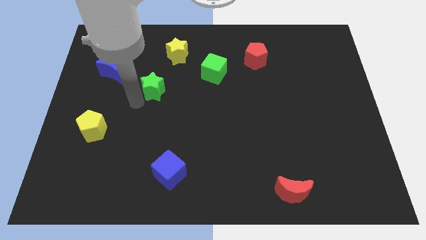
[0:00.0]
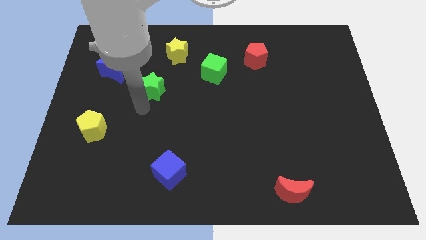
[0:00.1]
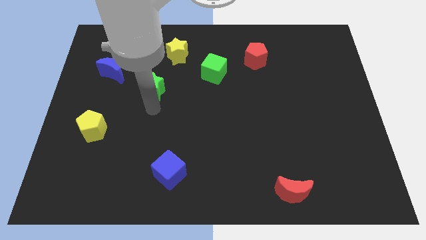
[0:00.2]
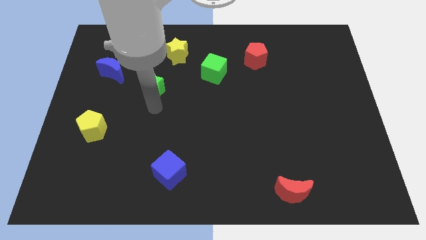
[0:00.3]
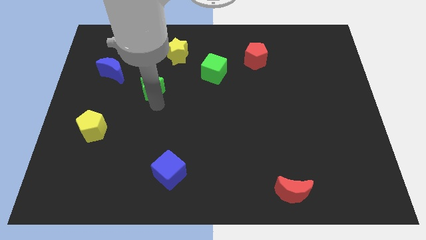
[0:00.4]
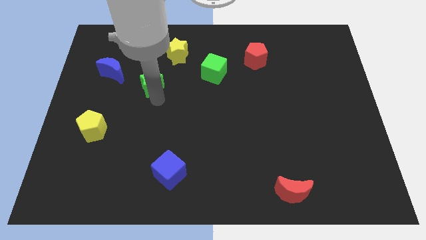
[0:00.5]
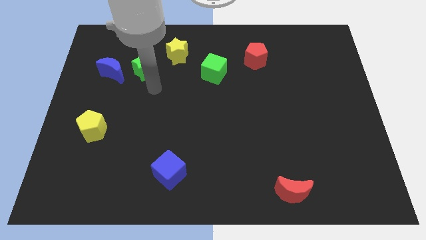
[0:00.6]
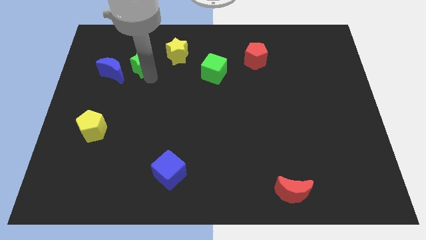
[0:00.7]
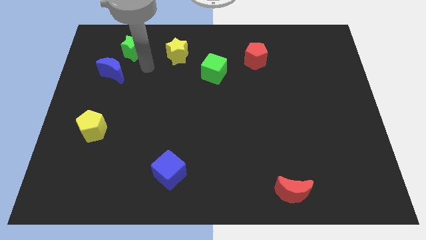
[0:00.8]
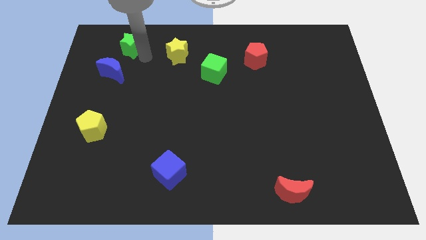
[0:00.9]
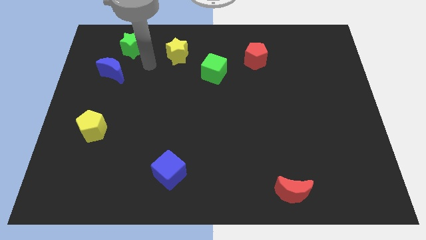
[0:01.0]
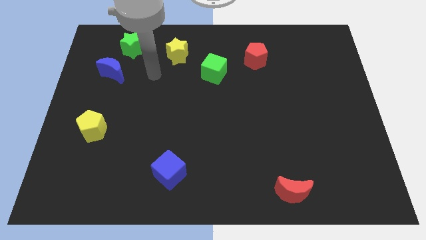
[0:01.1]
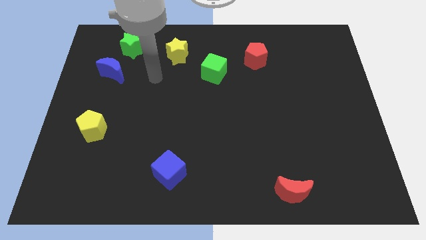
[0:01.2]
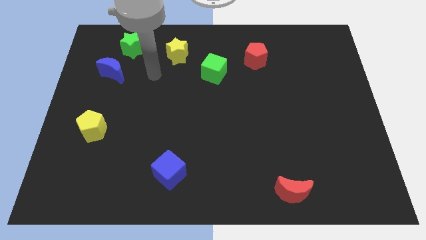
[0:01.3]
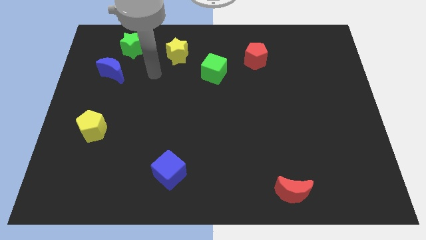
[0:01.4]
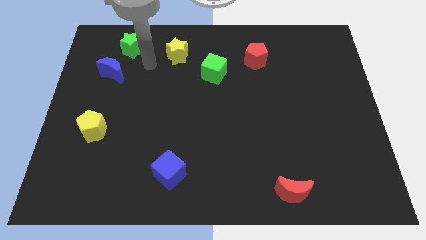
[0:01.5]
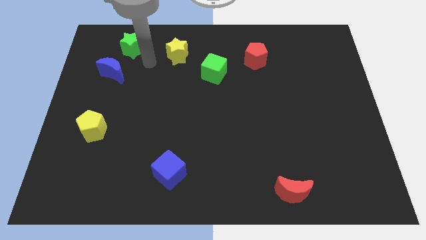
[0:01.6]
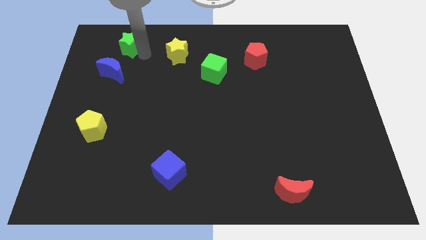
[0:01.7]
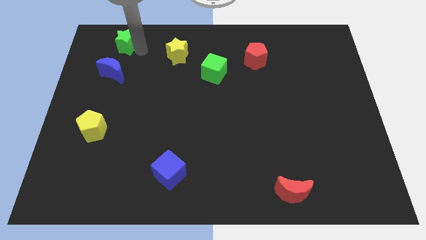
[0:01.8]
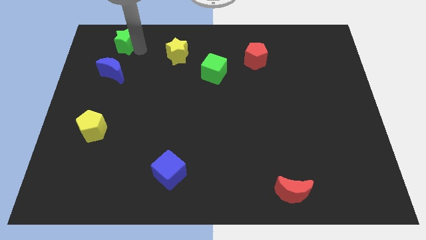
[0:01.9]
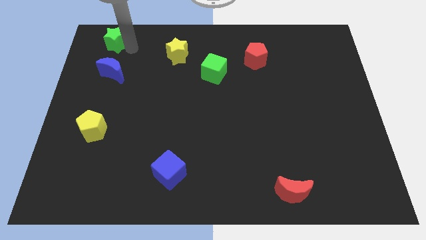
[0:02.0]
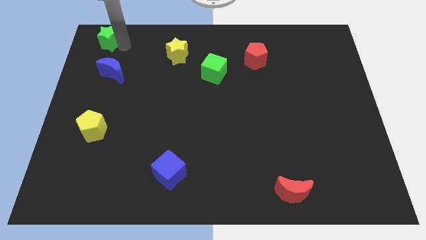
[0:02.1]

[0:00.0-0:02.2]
place green star on top of blue crescent

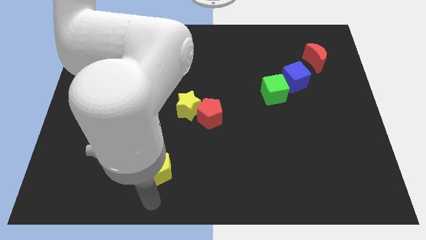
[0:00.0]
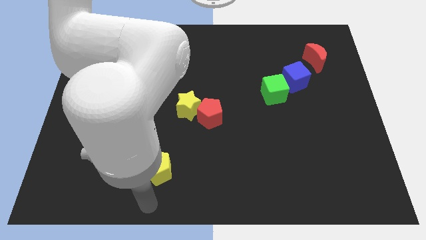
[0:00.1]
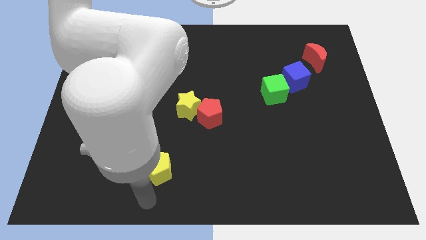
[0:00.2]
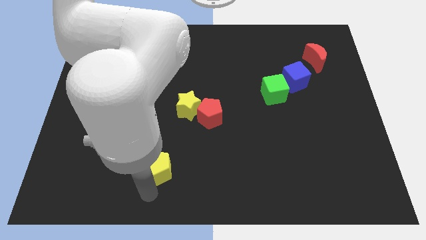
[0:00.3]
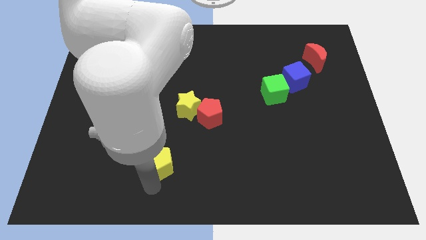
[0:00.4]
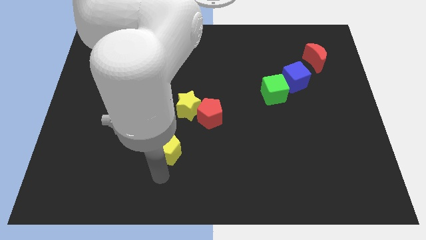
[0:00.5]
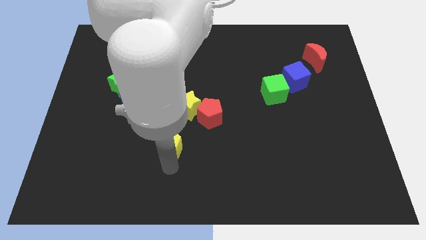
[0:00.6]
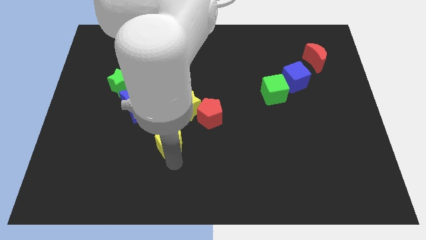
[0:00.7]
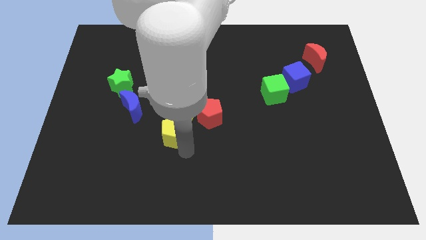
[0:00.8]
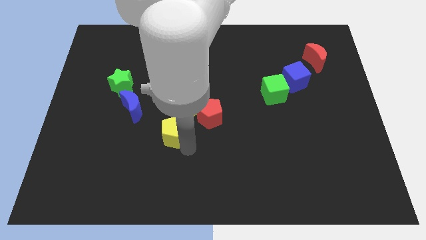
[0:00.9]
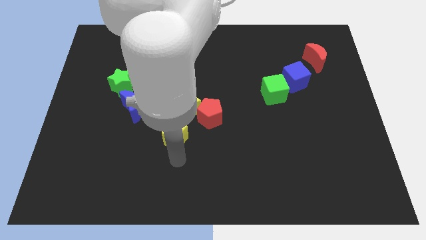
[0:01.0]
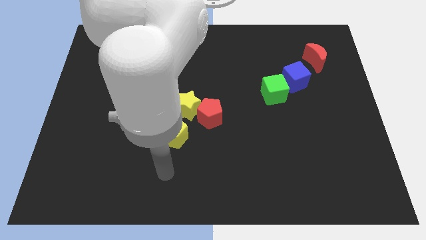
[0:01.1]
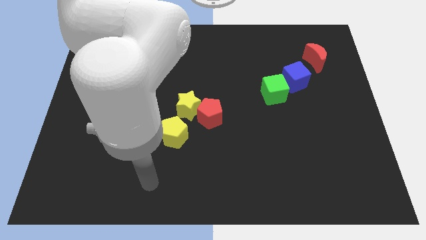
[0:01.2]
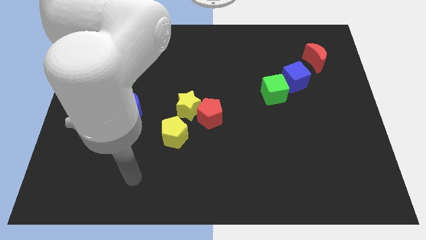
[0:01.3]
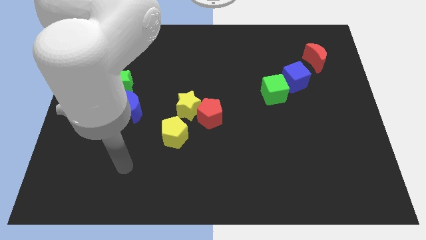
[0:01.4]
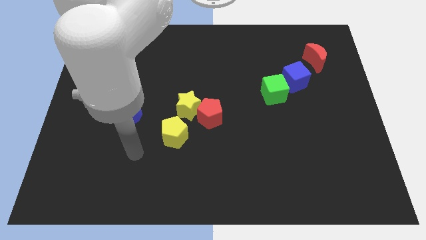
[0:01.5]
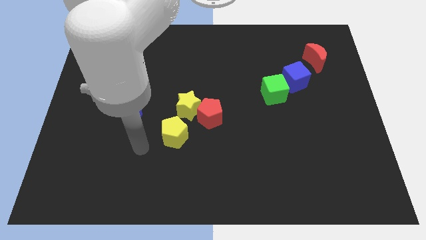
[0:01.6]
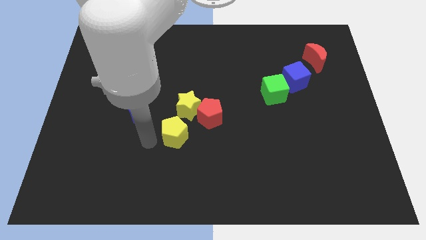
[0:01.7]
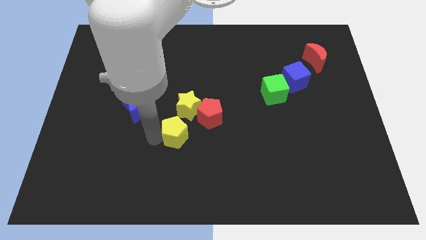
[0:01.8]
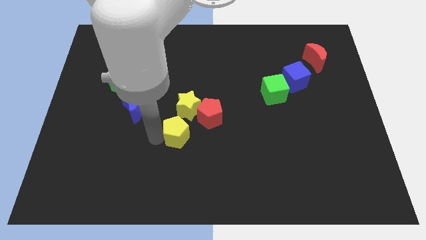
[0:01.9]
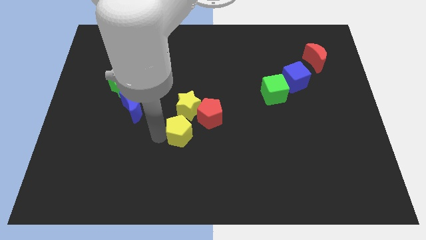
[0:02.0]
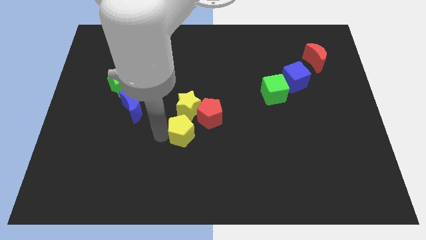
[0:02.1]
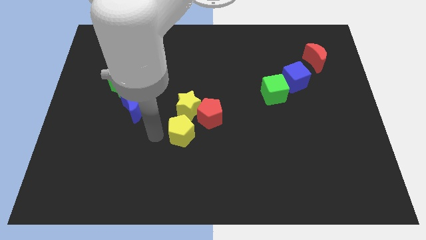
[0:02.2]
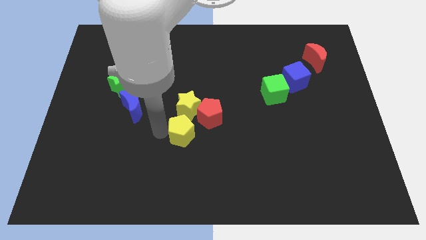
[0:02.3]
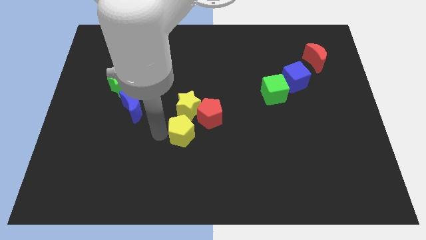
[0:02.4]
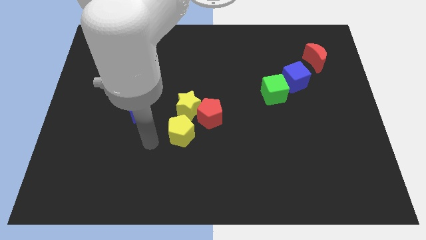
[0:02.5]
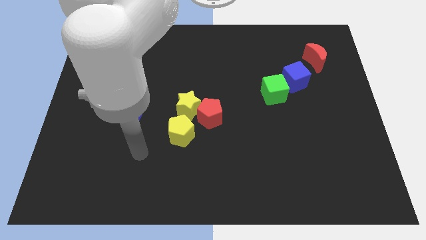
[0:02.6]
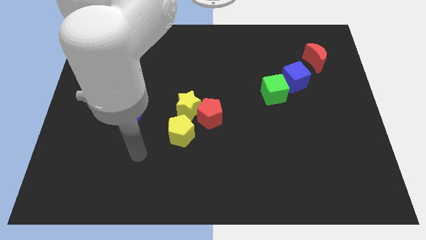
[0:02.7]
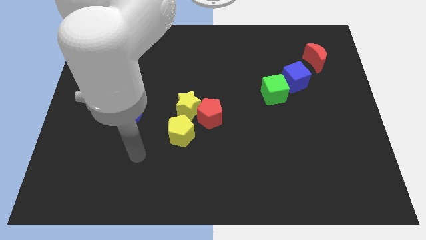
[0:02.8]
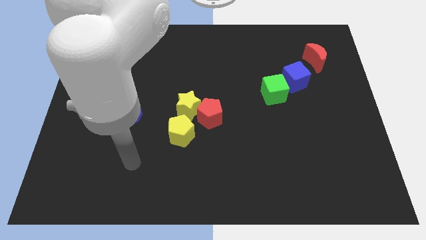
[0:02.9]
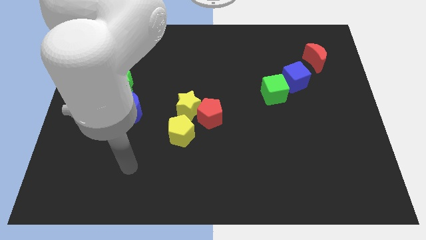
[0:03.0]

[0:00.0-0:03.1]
slide the yellow pentagon to the bottom left side of the yellow star

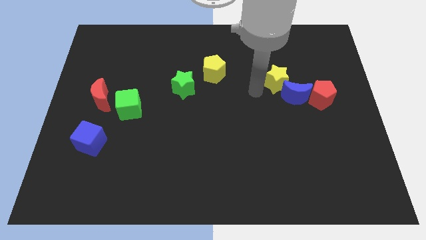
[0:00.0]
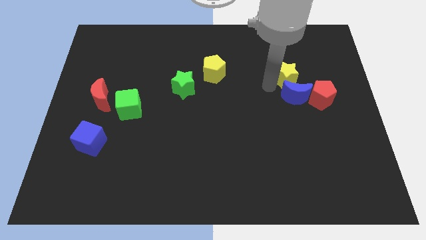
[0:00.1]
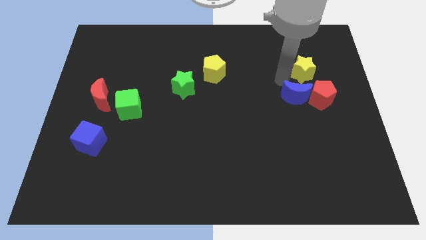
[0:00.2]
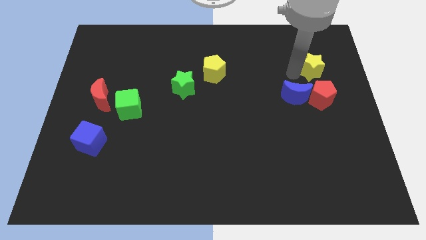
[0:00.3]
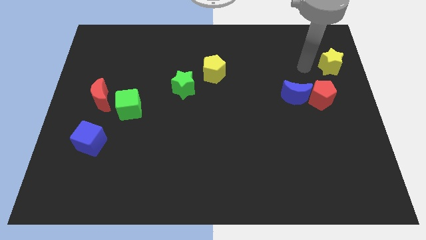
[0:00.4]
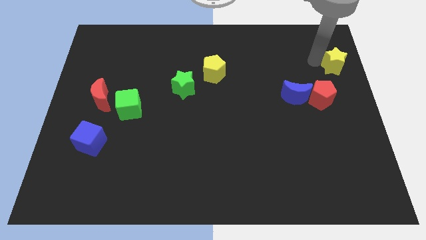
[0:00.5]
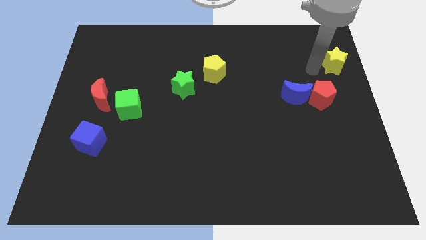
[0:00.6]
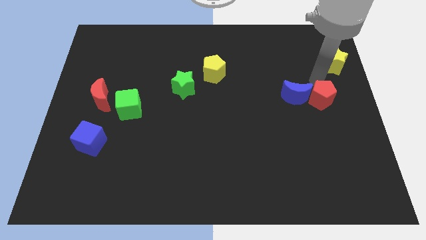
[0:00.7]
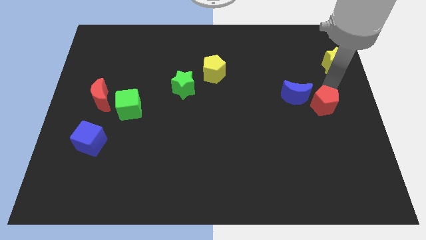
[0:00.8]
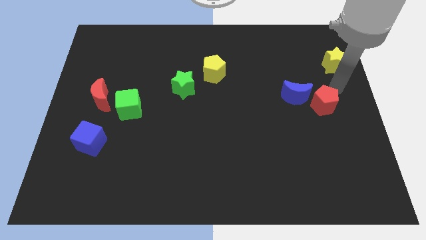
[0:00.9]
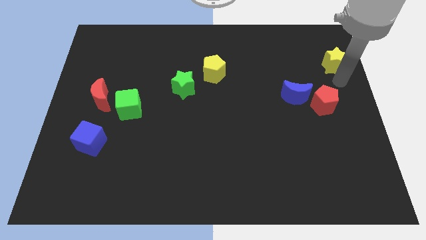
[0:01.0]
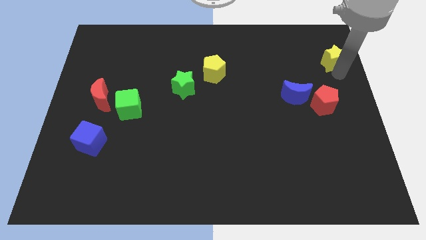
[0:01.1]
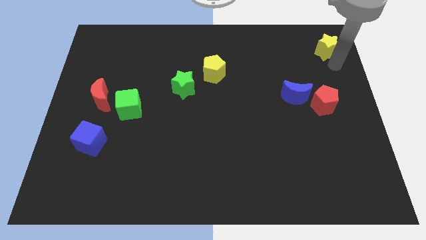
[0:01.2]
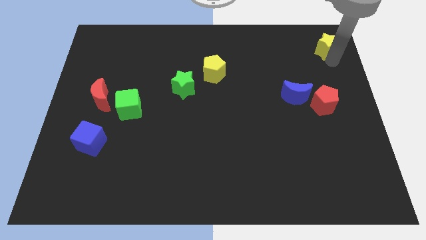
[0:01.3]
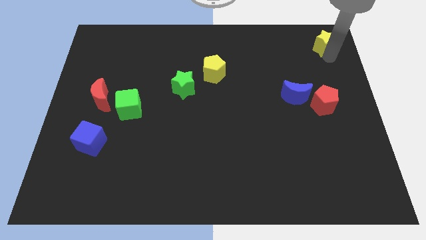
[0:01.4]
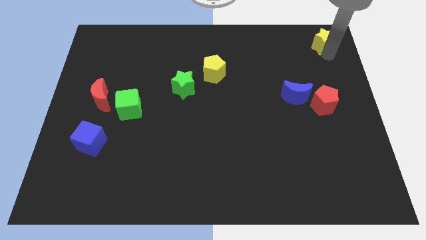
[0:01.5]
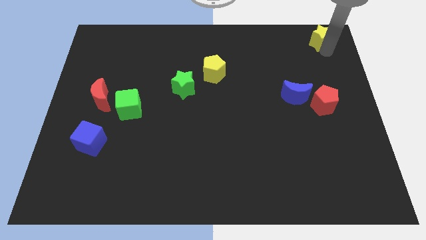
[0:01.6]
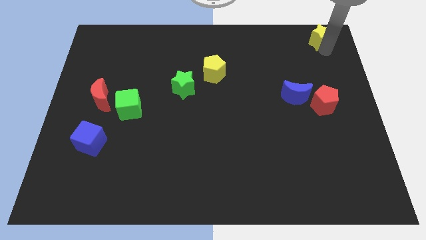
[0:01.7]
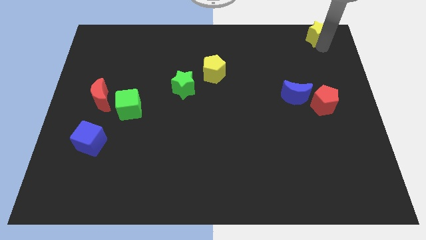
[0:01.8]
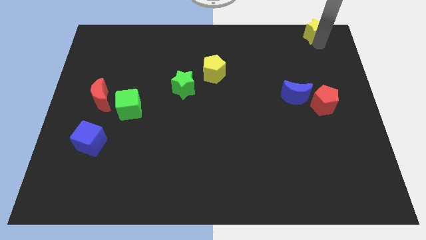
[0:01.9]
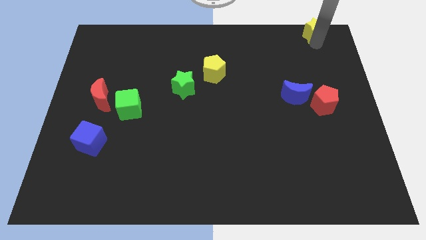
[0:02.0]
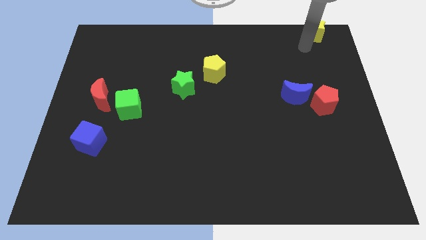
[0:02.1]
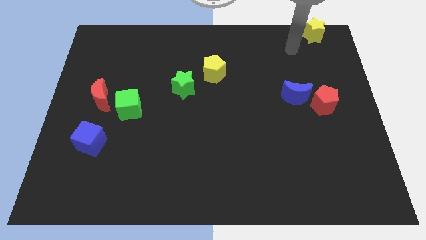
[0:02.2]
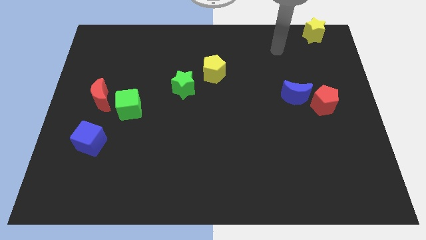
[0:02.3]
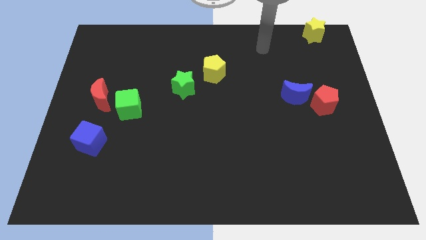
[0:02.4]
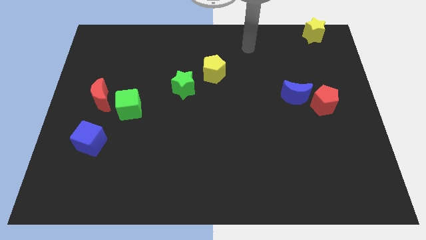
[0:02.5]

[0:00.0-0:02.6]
put the yellow star at the top side of the red pentagon

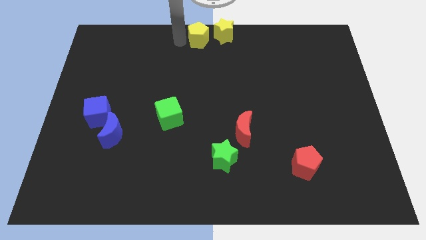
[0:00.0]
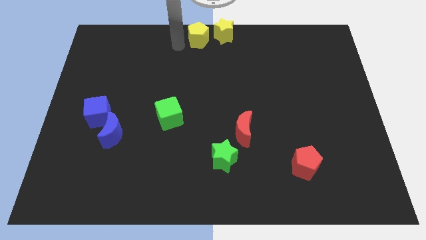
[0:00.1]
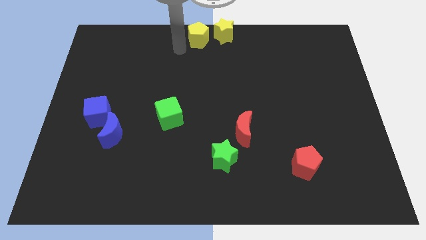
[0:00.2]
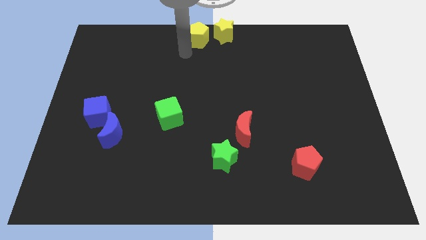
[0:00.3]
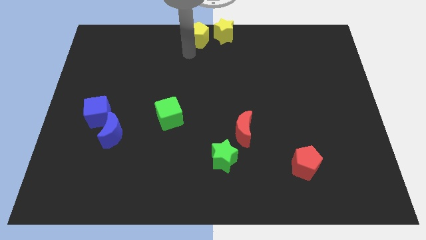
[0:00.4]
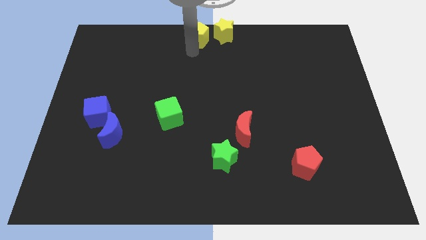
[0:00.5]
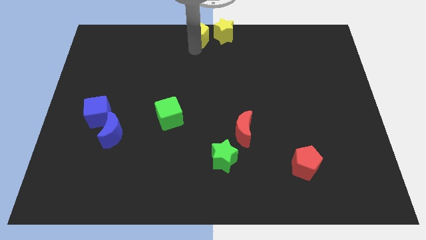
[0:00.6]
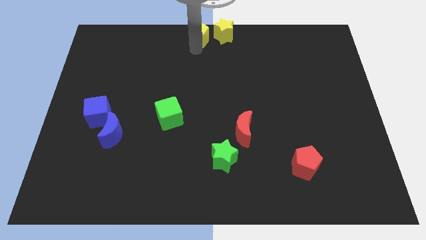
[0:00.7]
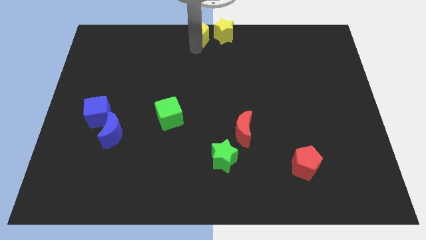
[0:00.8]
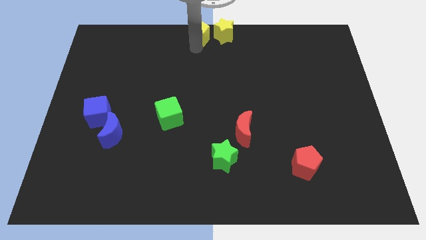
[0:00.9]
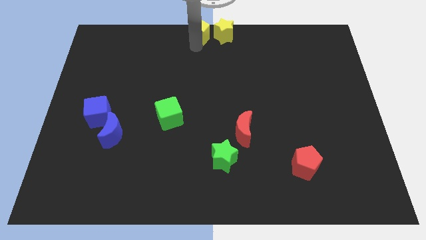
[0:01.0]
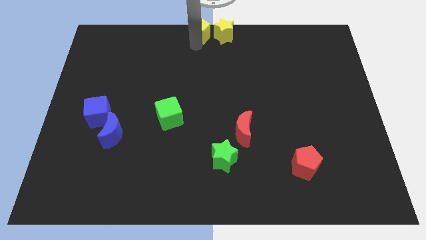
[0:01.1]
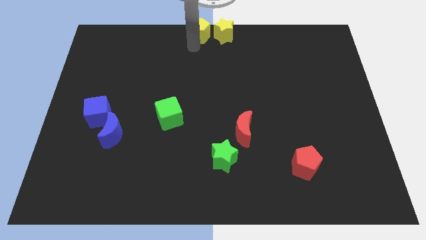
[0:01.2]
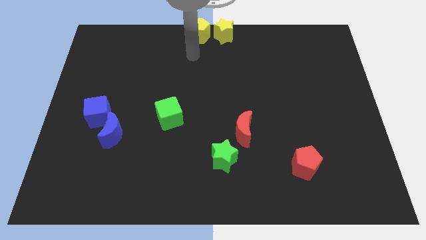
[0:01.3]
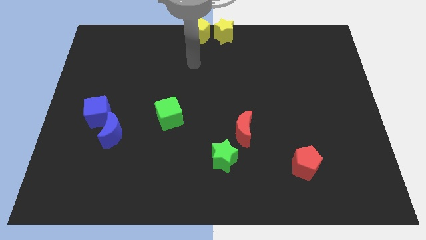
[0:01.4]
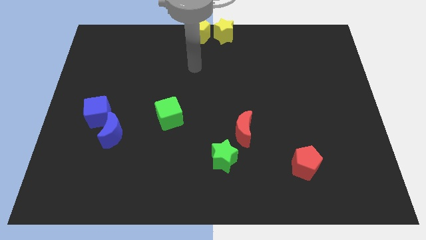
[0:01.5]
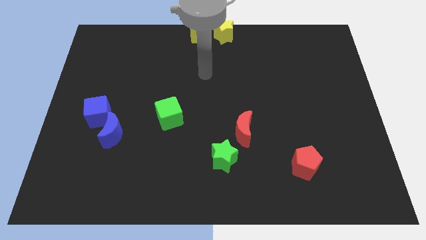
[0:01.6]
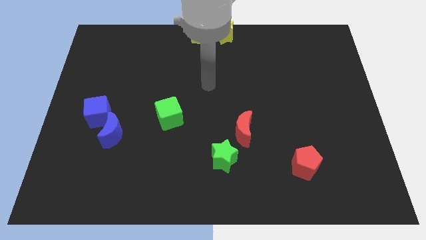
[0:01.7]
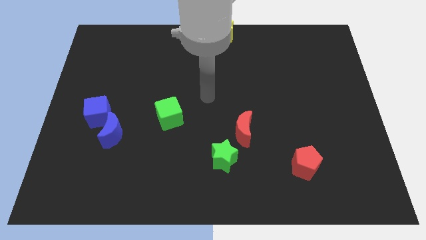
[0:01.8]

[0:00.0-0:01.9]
push the yellow pentagon to the top corner
